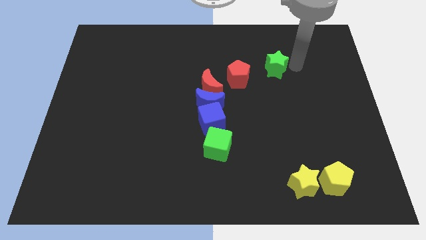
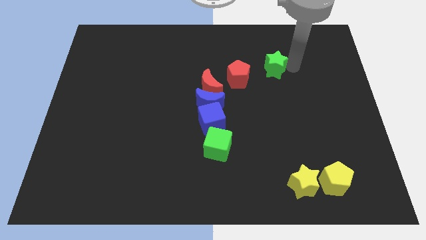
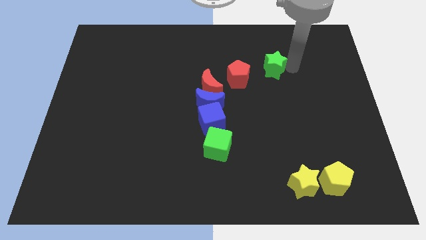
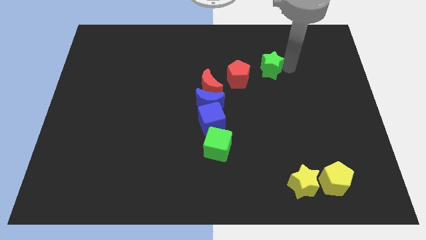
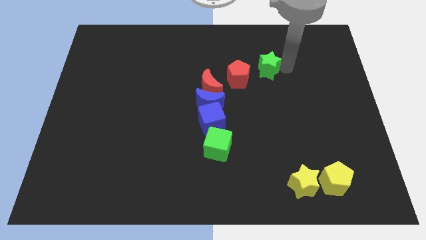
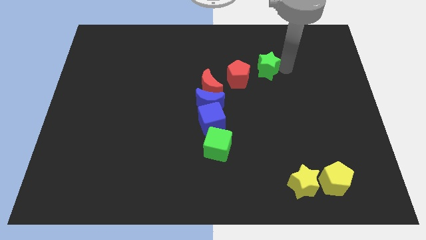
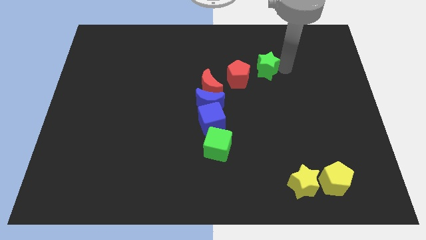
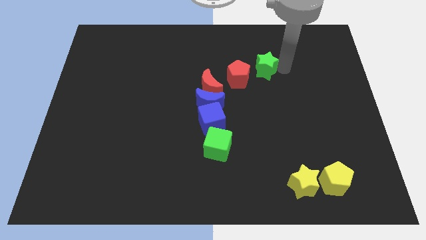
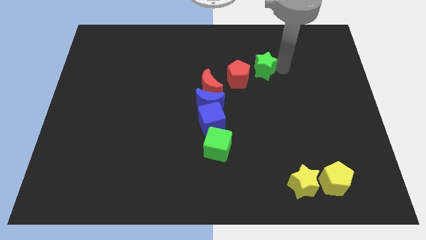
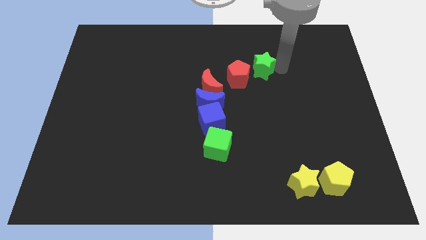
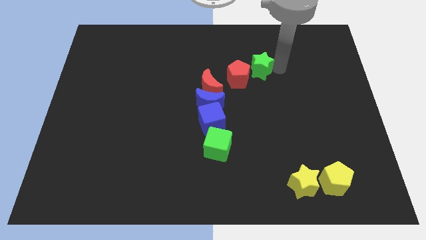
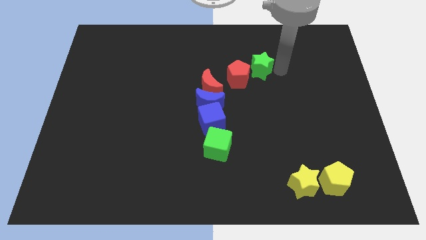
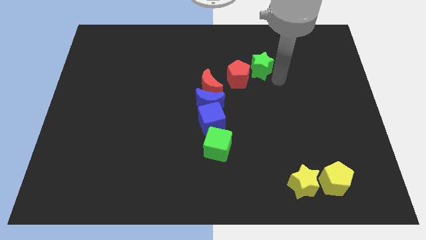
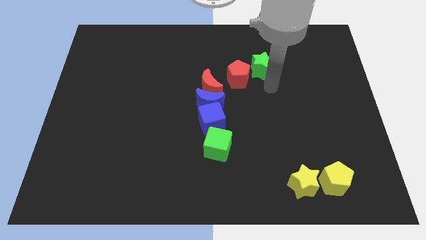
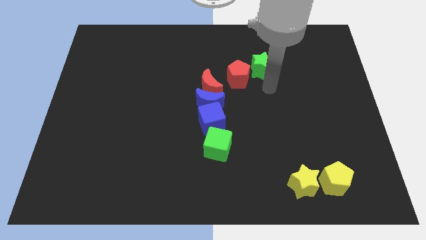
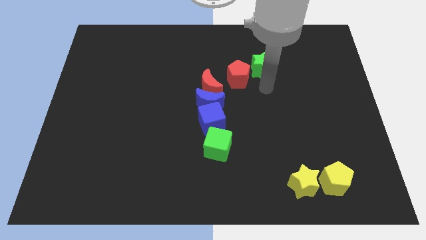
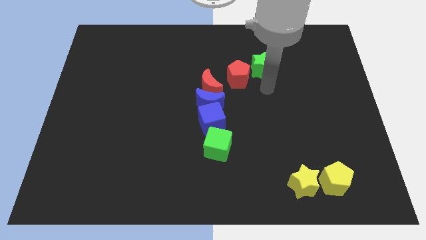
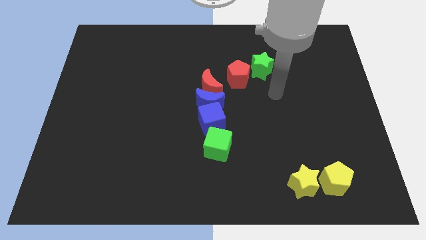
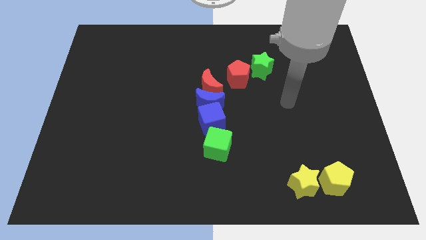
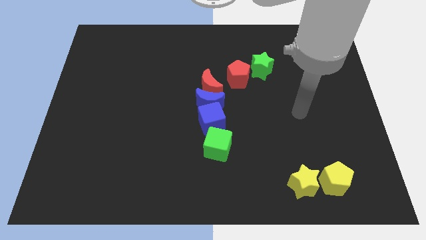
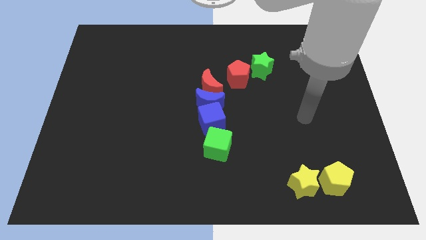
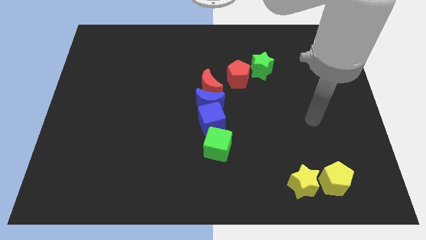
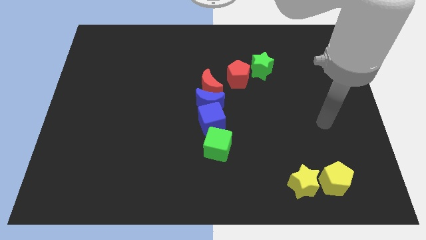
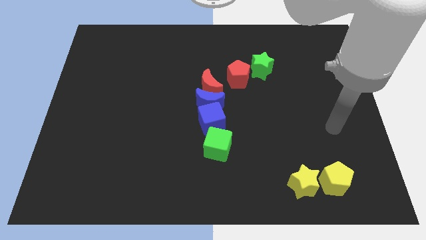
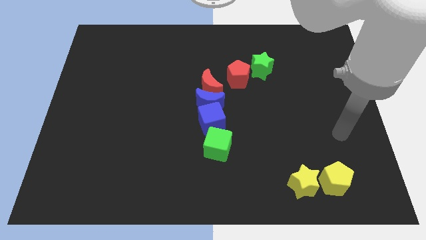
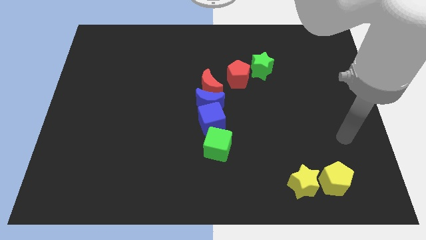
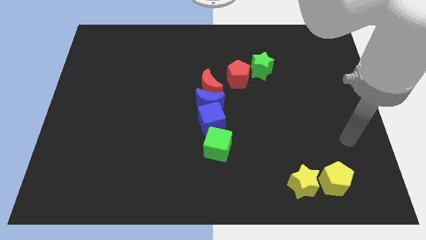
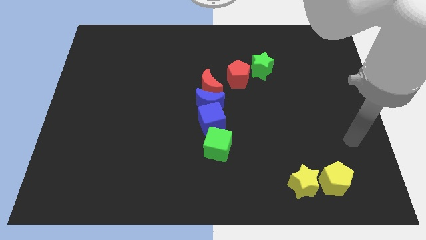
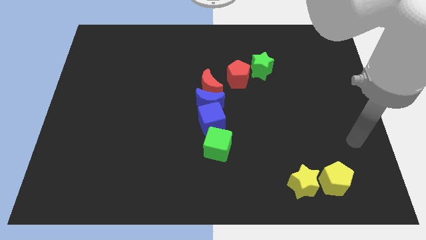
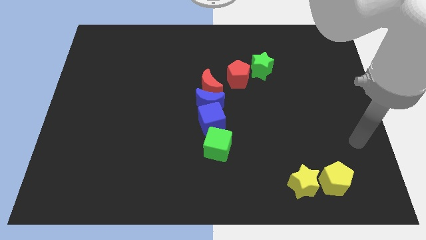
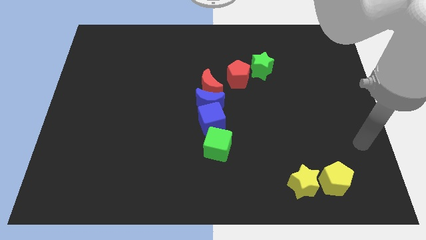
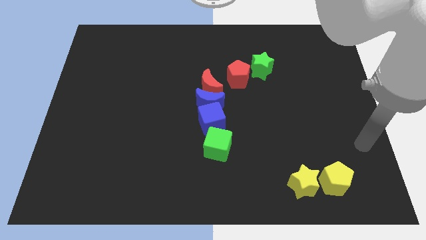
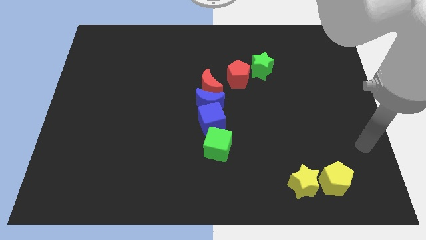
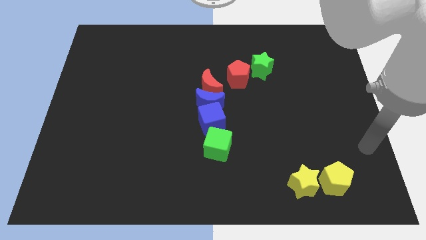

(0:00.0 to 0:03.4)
move the green star close to the red pentagon

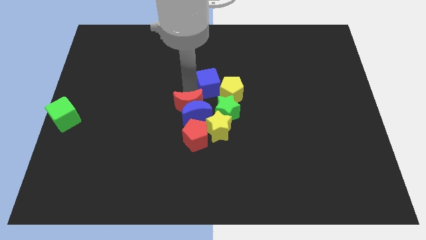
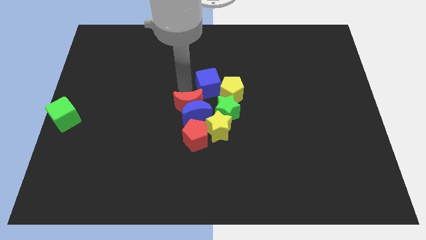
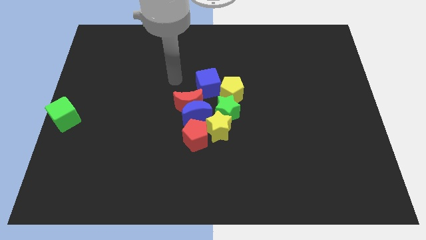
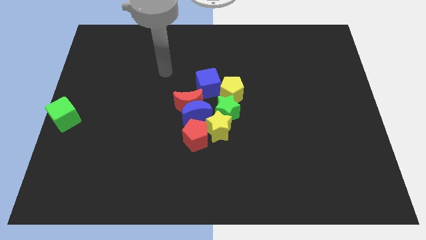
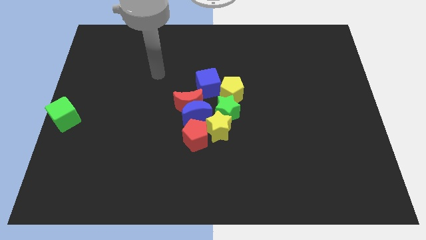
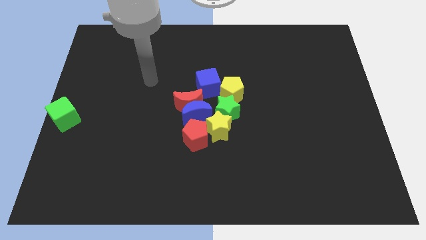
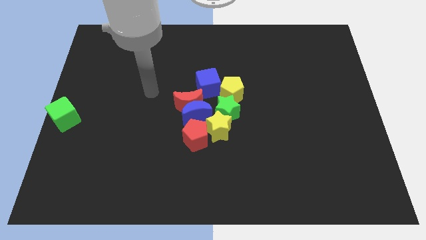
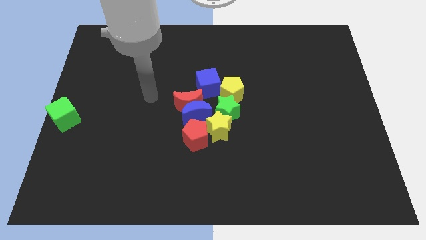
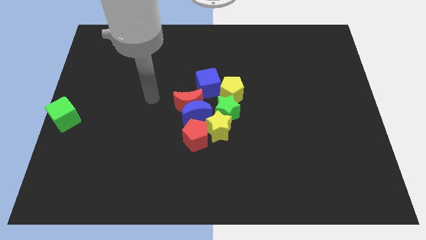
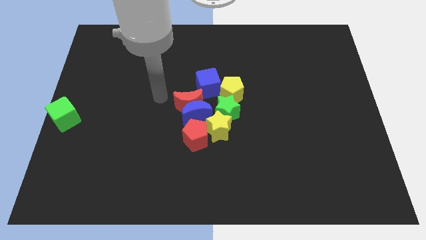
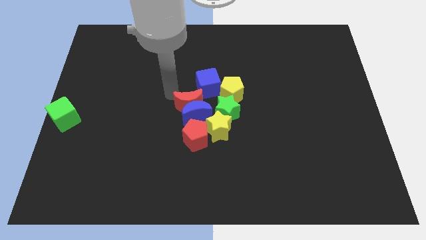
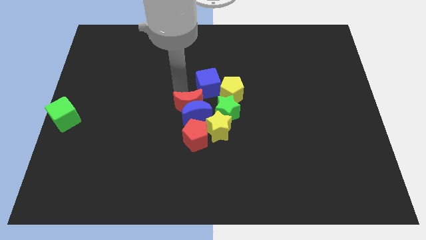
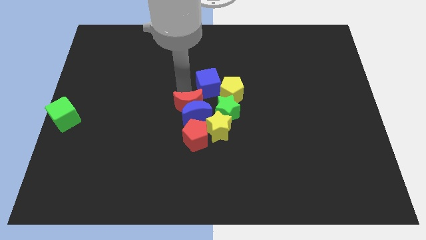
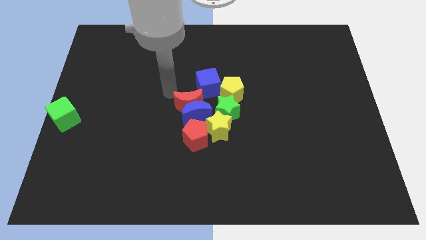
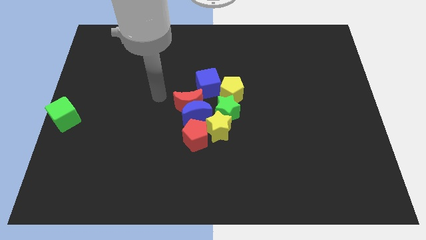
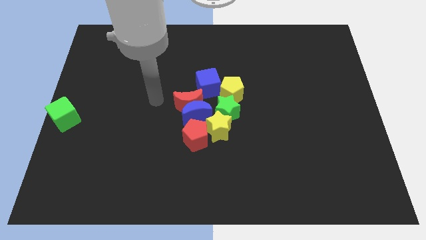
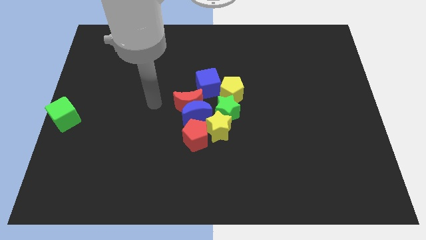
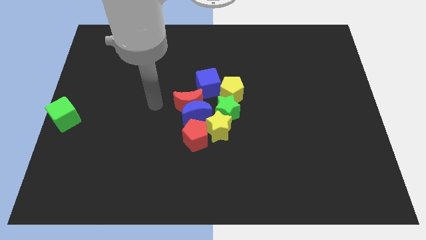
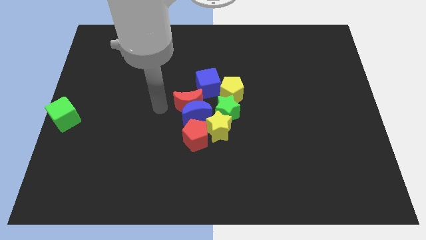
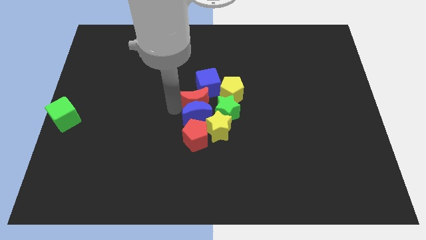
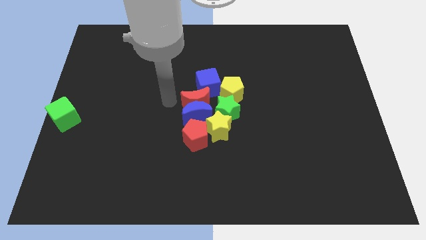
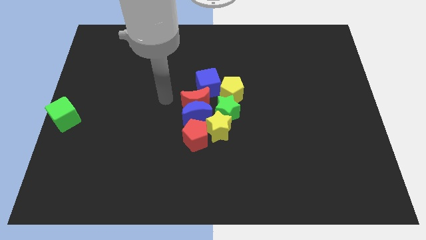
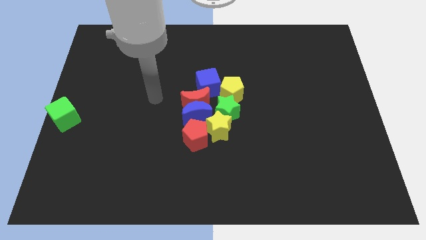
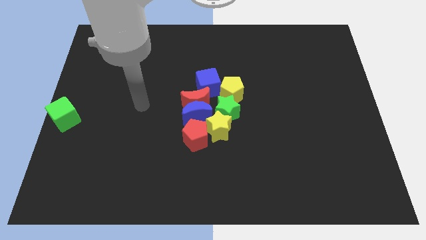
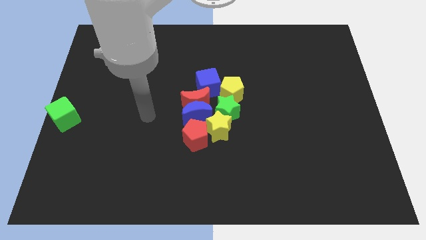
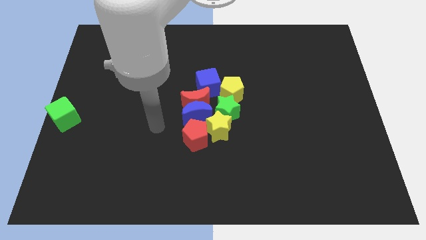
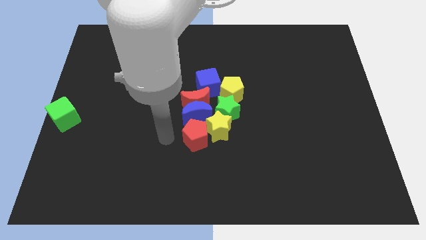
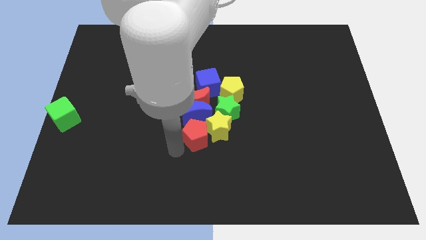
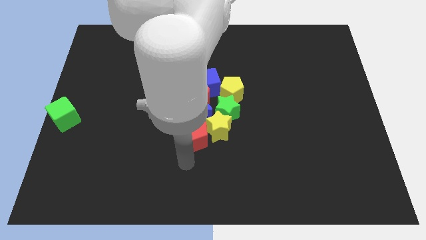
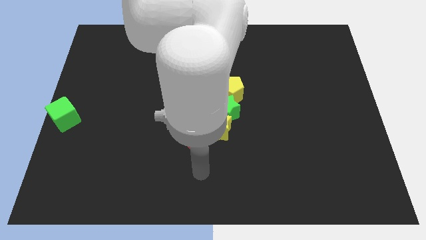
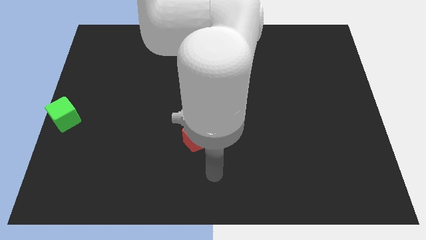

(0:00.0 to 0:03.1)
go and place your hand at the bottom of the group of blocks

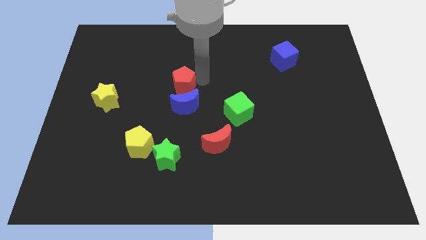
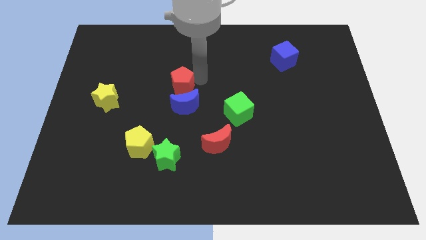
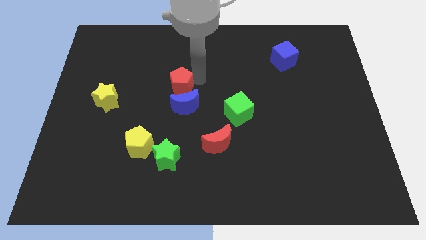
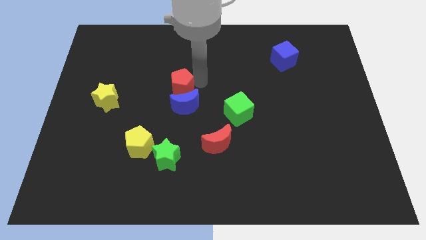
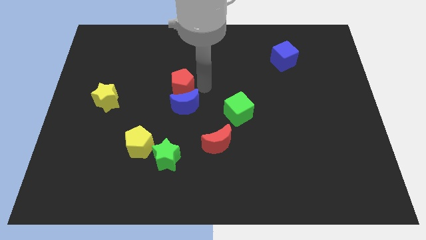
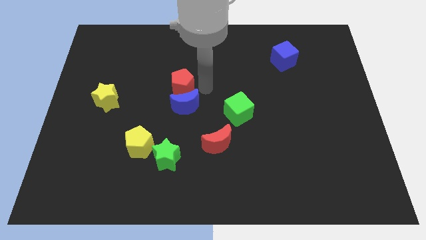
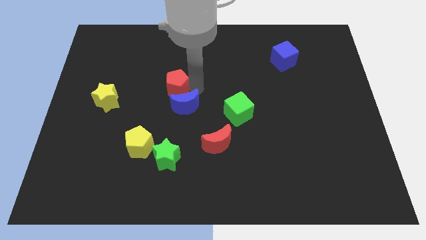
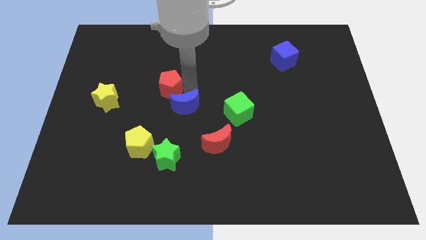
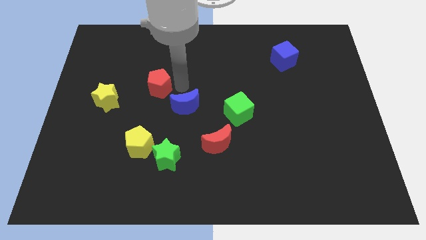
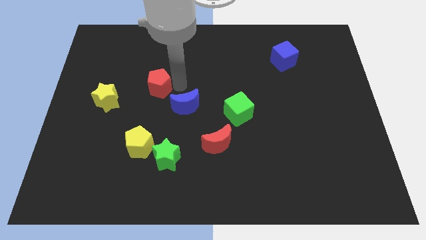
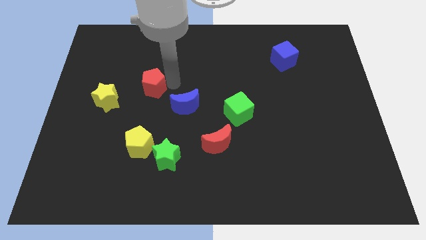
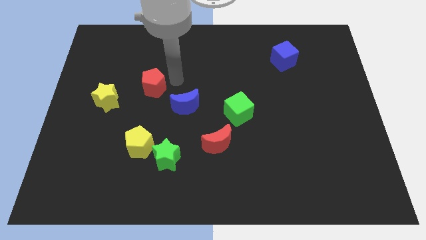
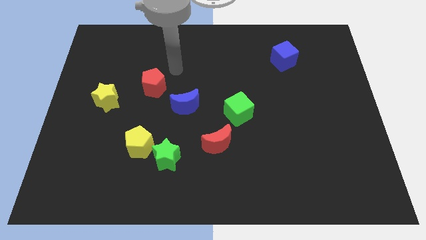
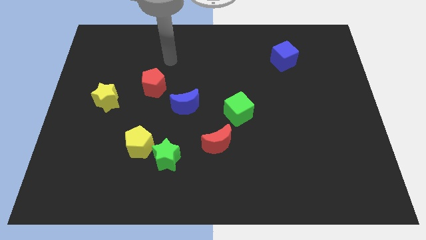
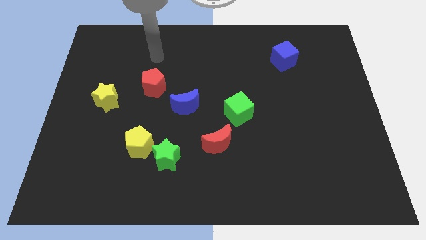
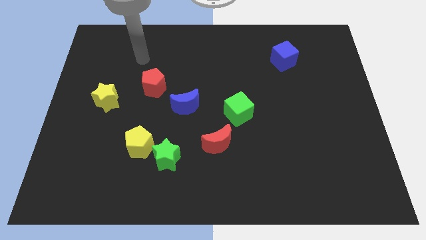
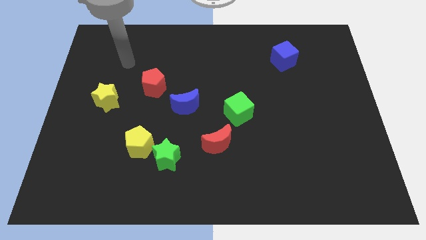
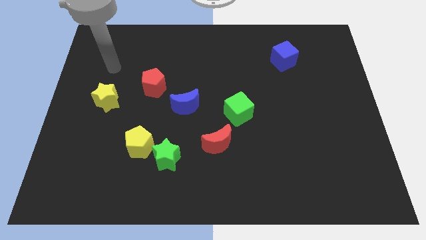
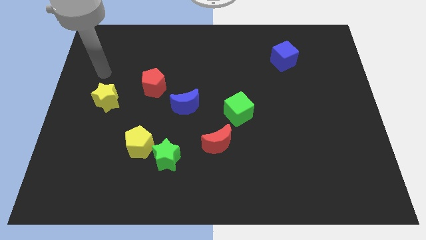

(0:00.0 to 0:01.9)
slide the red pentagon diagonally top left to the blue moon

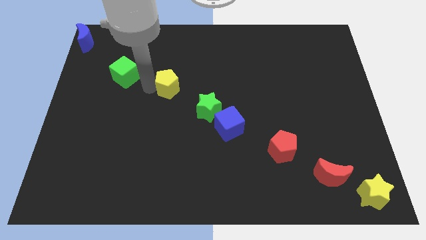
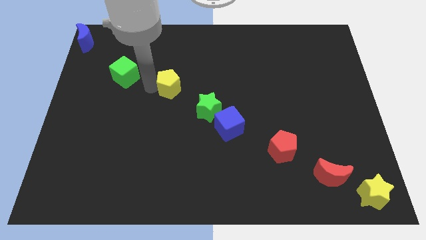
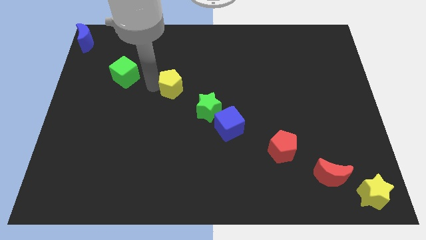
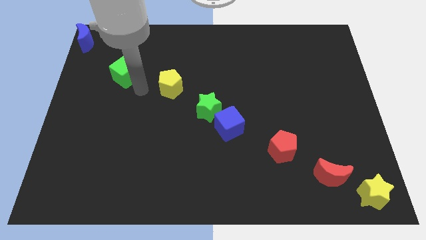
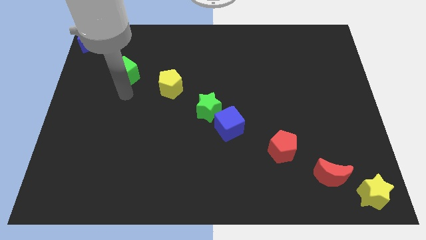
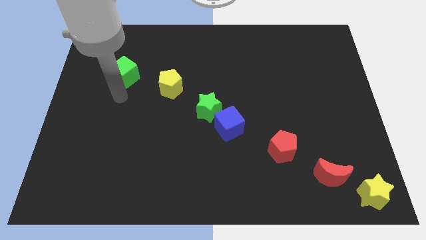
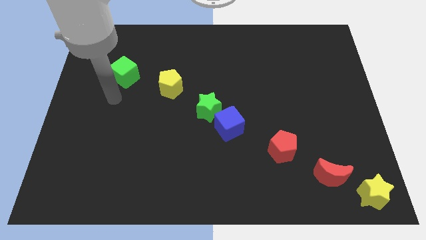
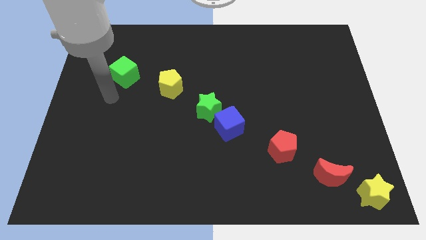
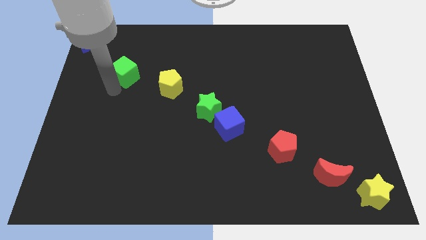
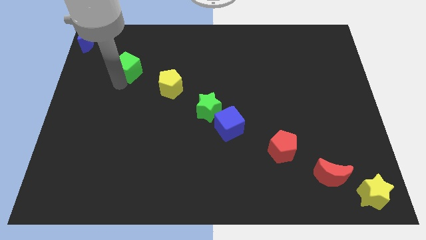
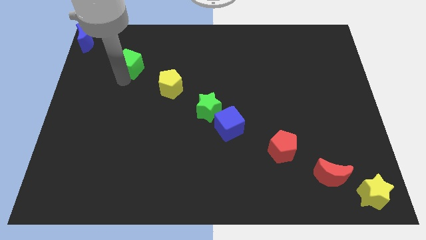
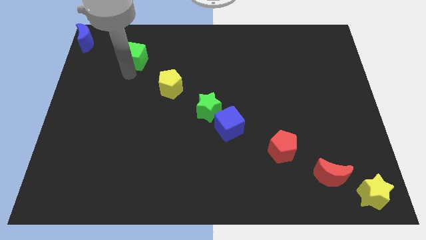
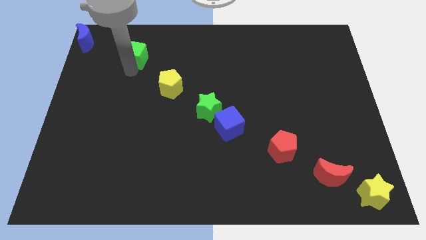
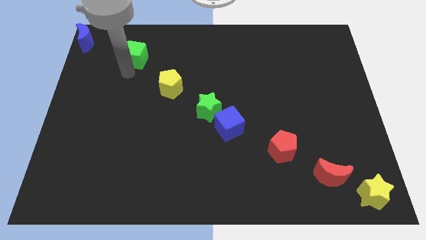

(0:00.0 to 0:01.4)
adjust the yellow pentagon diagonal to the green cube
